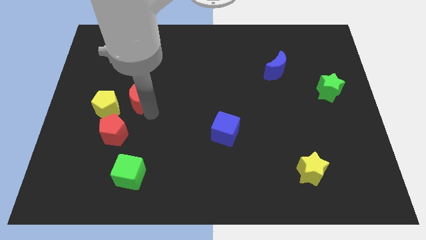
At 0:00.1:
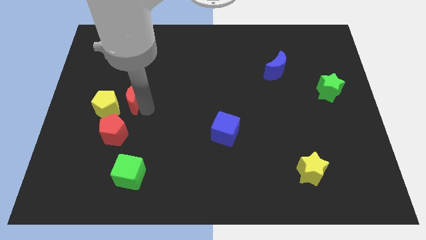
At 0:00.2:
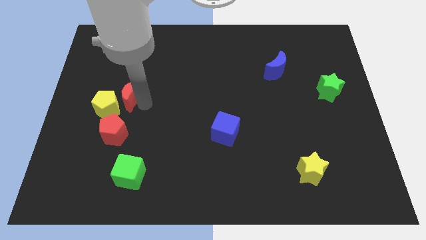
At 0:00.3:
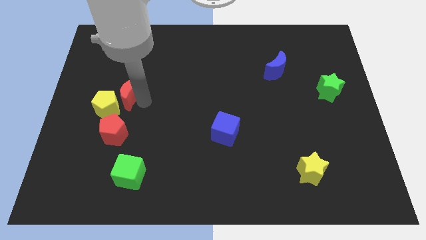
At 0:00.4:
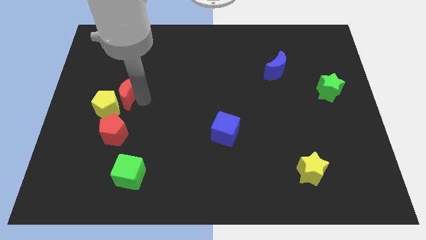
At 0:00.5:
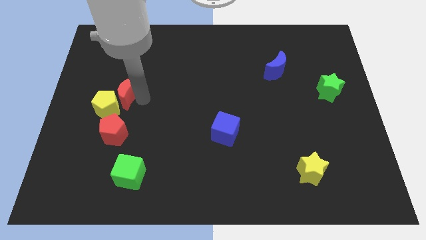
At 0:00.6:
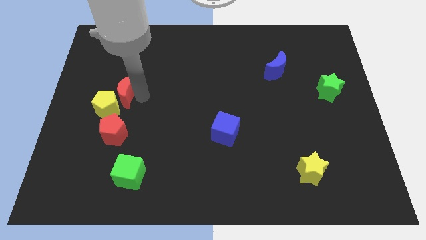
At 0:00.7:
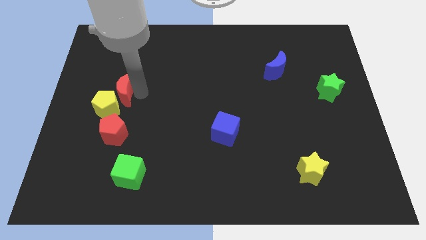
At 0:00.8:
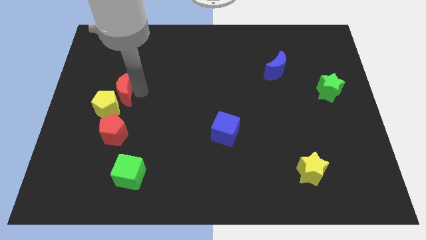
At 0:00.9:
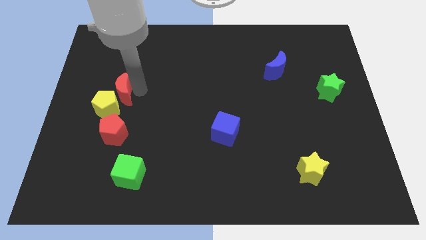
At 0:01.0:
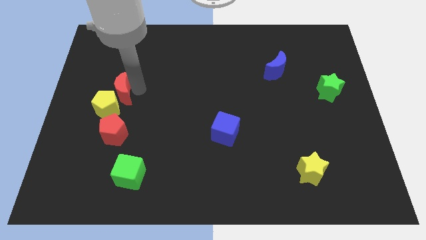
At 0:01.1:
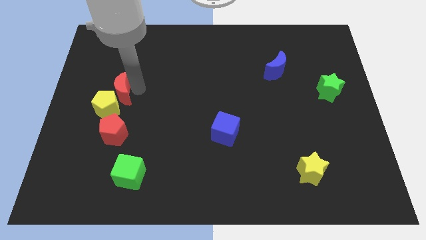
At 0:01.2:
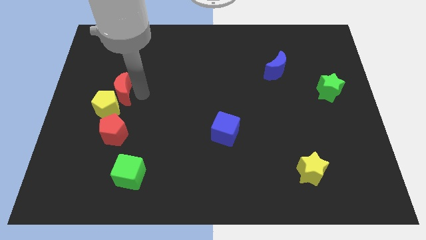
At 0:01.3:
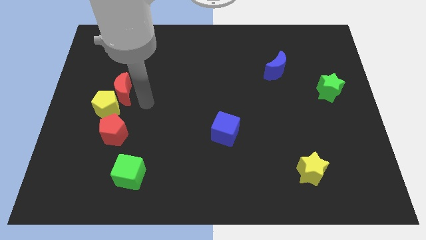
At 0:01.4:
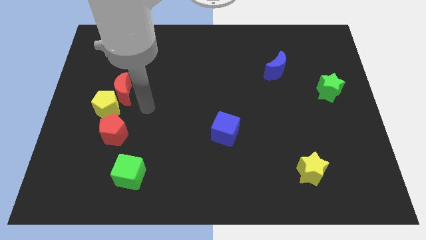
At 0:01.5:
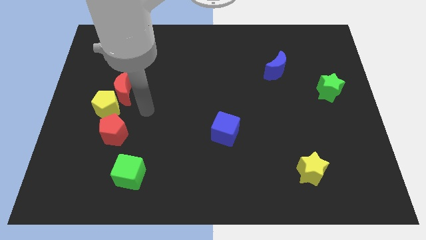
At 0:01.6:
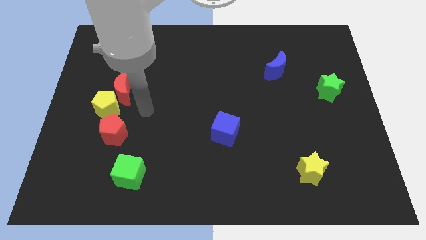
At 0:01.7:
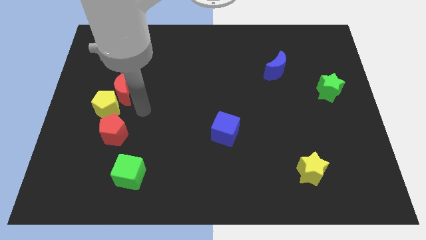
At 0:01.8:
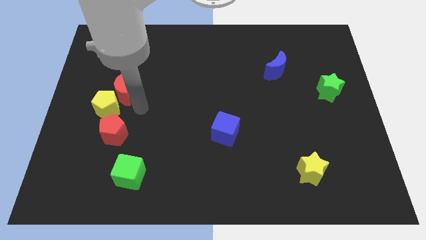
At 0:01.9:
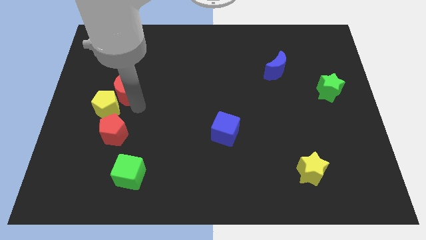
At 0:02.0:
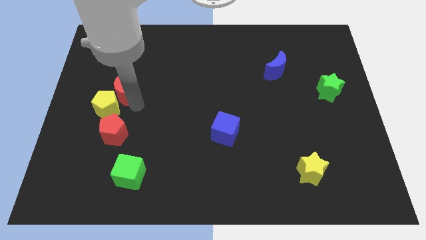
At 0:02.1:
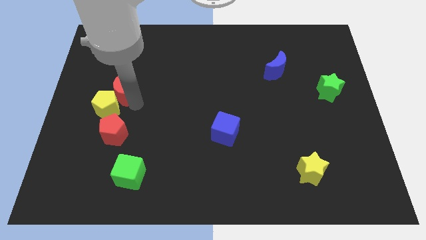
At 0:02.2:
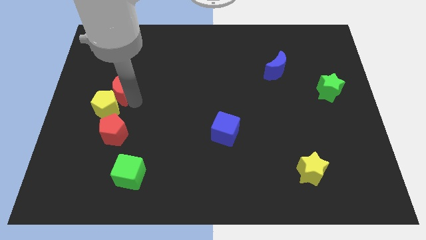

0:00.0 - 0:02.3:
push the red moon into the yellow pentagon

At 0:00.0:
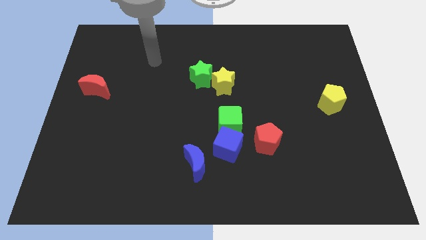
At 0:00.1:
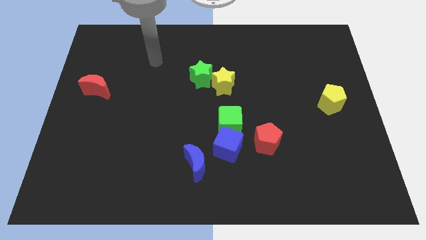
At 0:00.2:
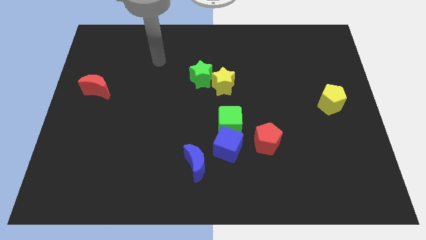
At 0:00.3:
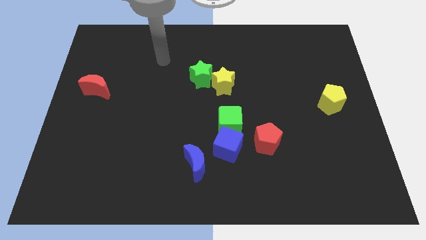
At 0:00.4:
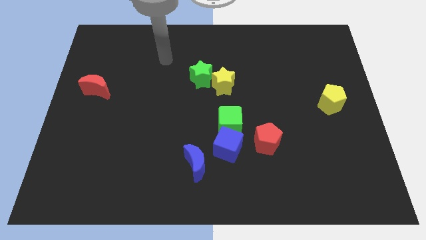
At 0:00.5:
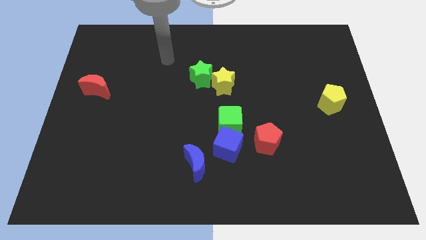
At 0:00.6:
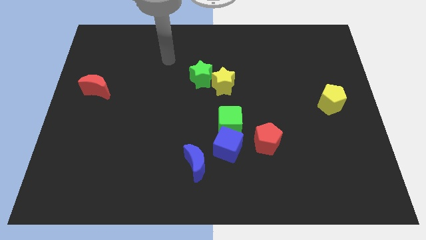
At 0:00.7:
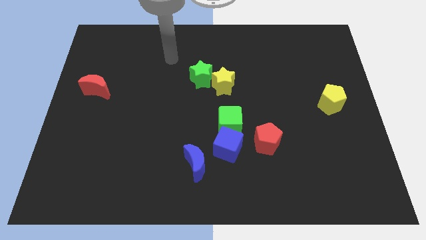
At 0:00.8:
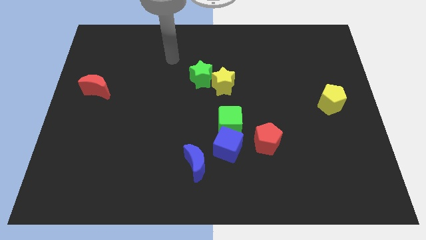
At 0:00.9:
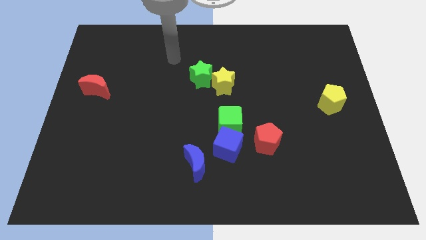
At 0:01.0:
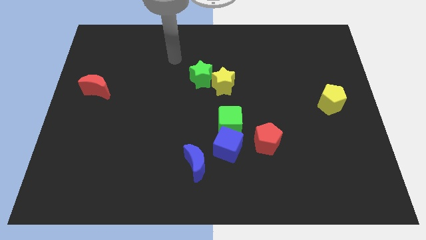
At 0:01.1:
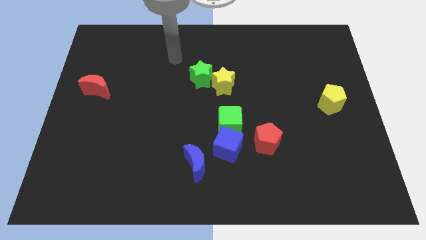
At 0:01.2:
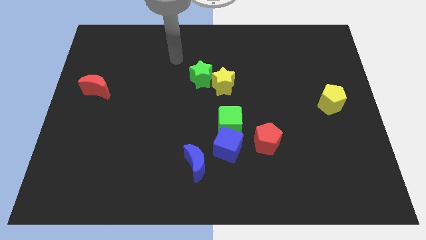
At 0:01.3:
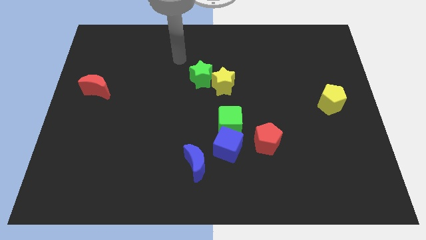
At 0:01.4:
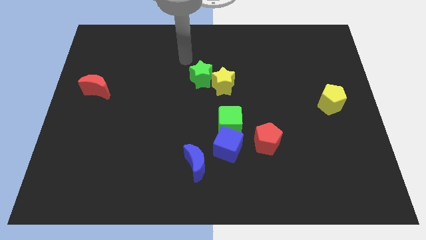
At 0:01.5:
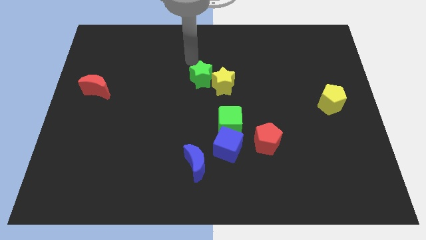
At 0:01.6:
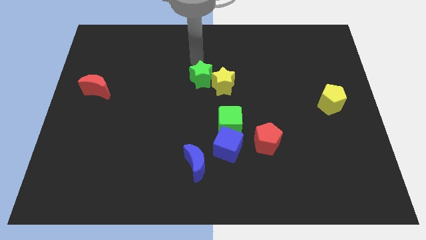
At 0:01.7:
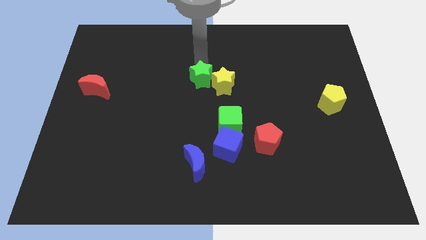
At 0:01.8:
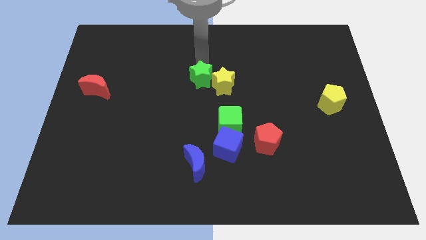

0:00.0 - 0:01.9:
point your hand above the green star

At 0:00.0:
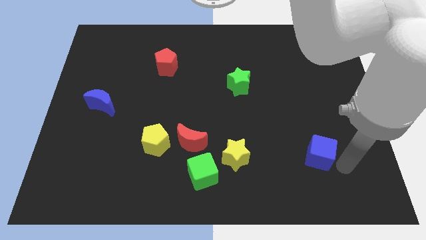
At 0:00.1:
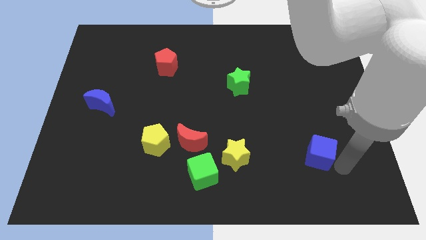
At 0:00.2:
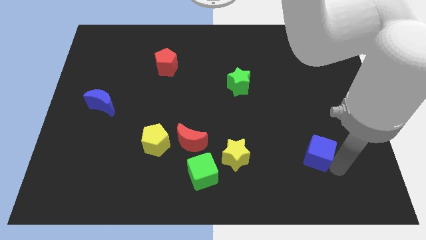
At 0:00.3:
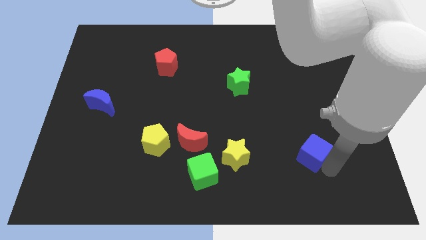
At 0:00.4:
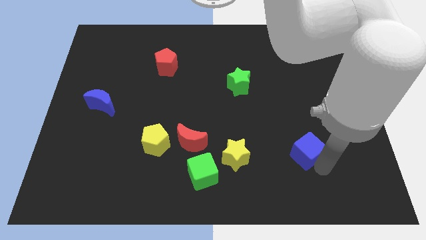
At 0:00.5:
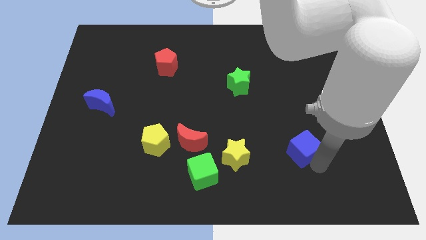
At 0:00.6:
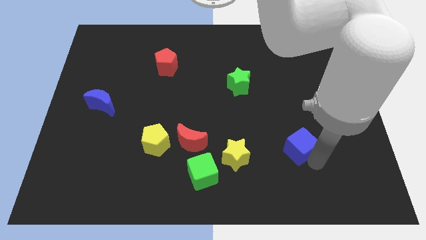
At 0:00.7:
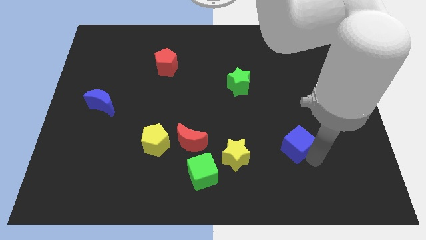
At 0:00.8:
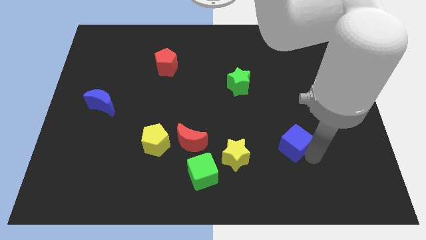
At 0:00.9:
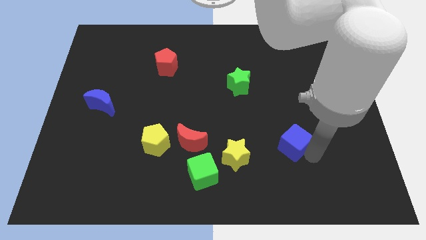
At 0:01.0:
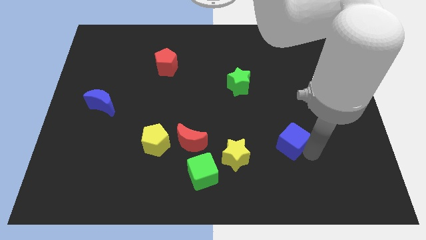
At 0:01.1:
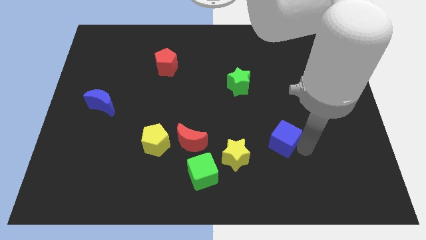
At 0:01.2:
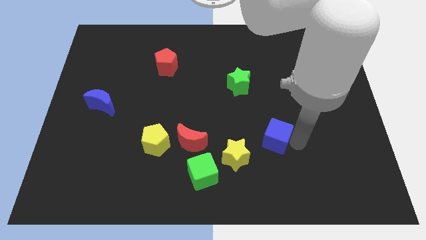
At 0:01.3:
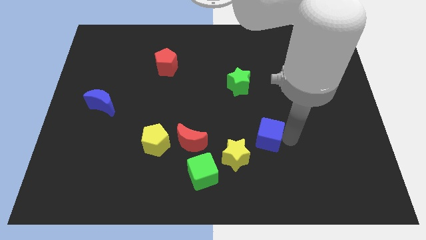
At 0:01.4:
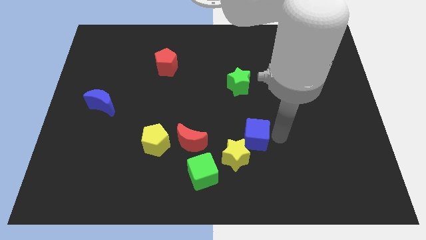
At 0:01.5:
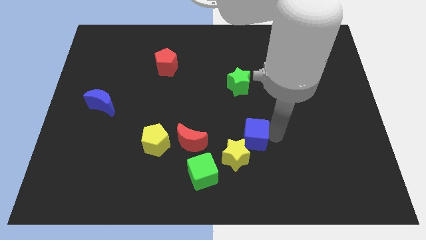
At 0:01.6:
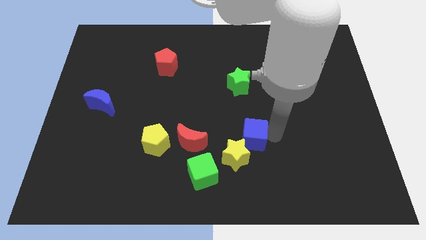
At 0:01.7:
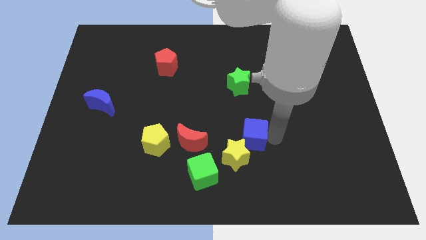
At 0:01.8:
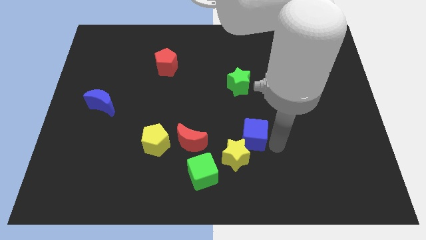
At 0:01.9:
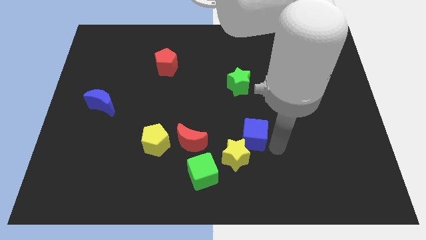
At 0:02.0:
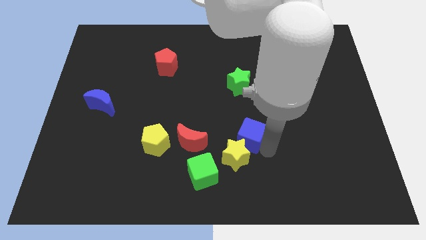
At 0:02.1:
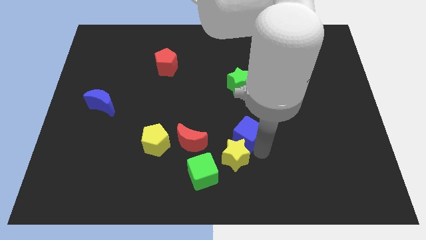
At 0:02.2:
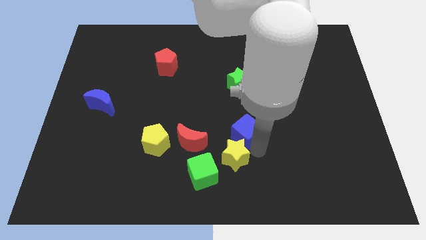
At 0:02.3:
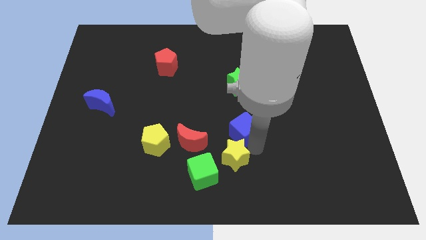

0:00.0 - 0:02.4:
slide blue cube below green star

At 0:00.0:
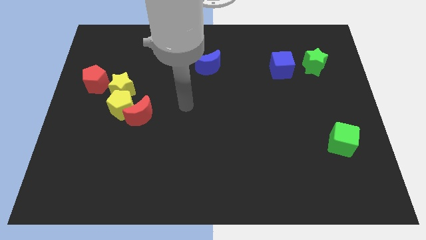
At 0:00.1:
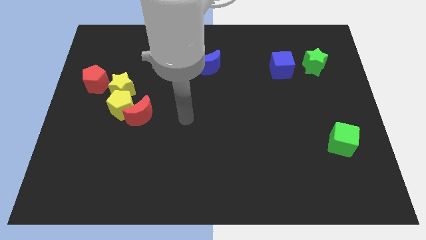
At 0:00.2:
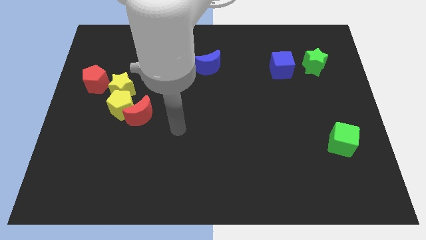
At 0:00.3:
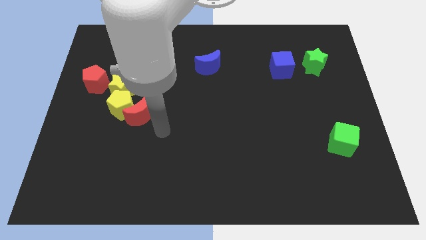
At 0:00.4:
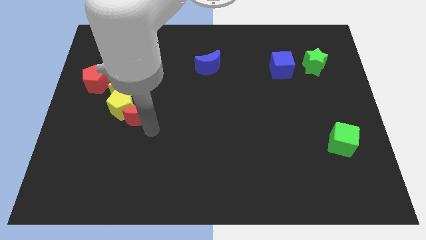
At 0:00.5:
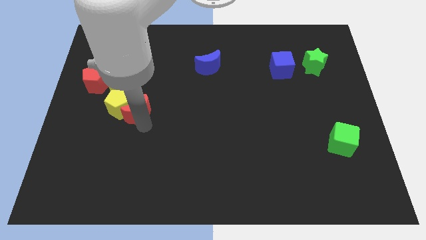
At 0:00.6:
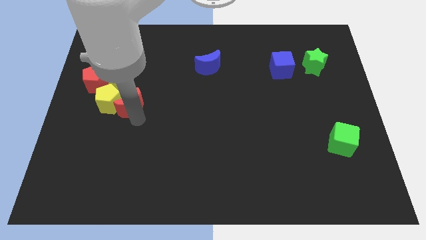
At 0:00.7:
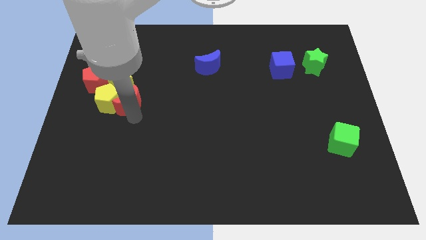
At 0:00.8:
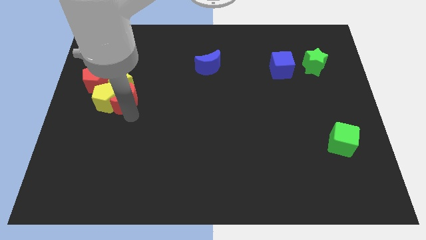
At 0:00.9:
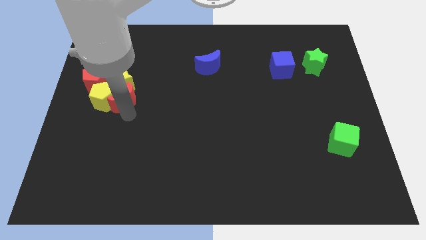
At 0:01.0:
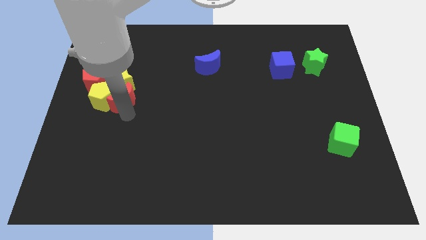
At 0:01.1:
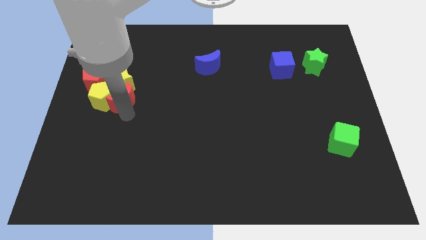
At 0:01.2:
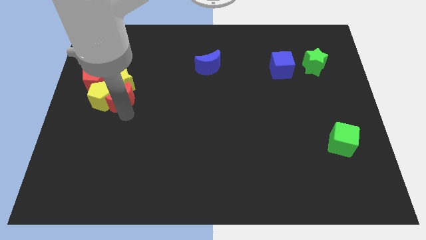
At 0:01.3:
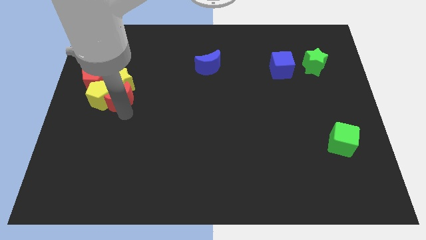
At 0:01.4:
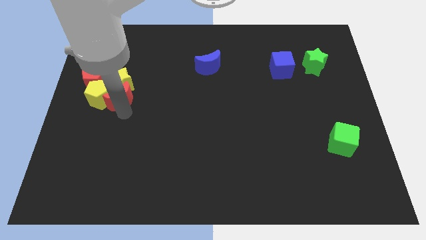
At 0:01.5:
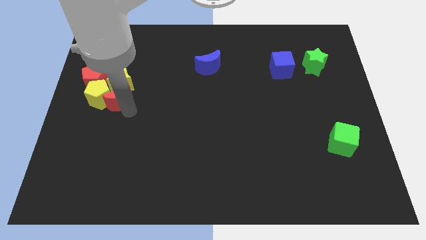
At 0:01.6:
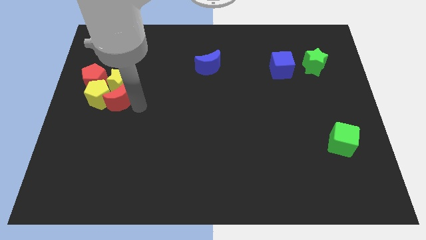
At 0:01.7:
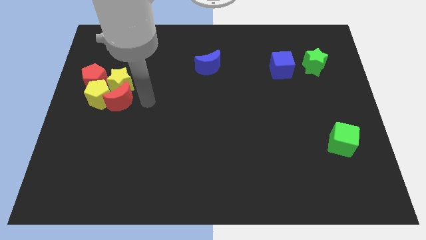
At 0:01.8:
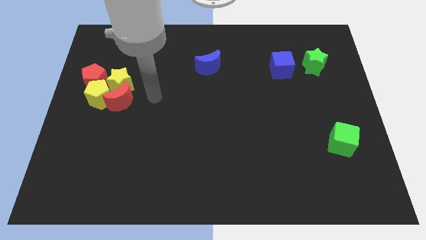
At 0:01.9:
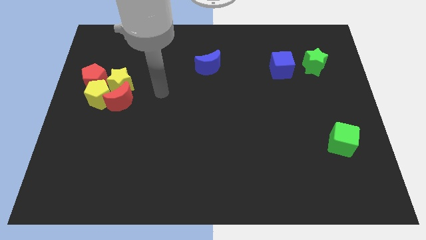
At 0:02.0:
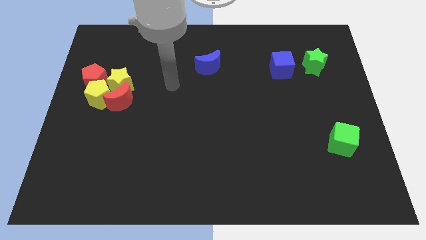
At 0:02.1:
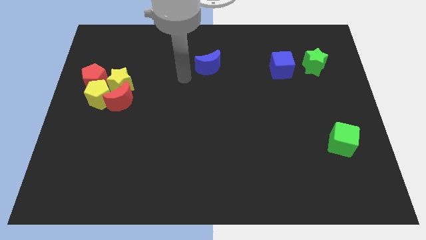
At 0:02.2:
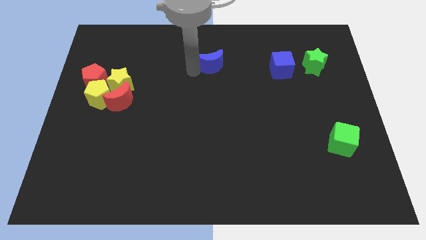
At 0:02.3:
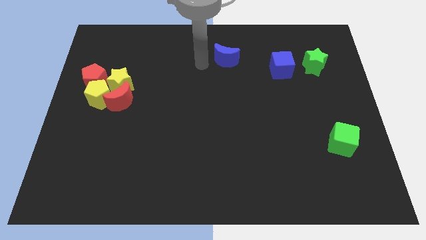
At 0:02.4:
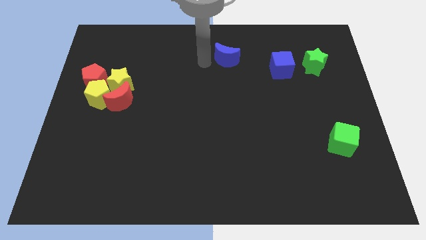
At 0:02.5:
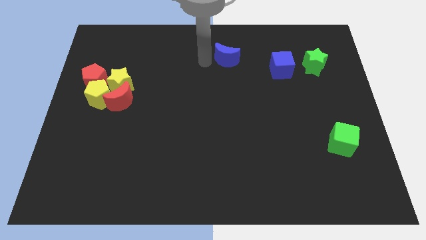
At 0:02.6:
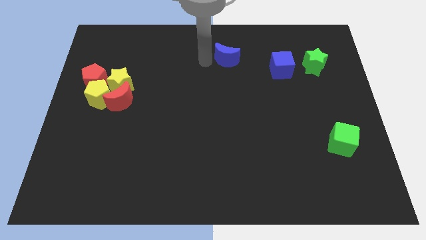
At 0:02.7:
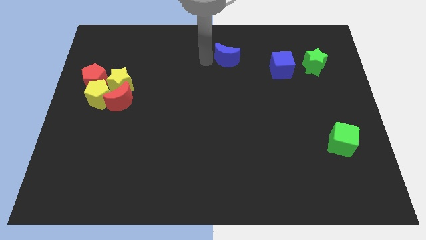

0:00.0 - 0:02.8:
push the red crescent and yellow pentagon into the red pentagon
